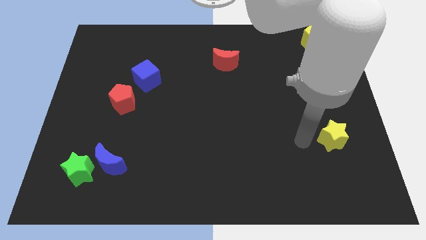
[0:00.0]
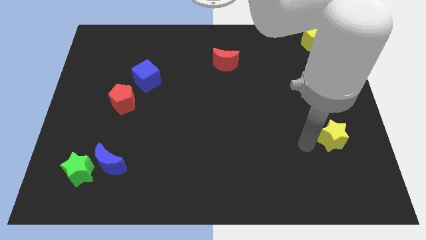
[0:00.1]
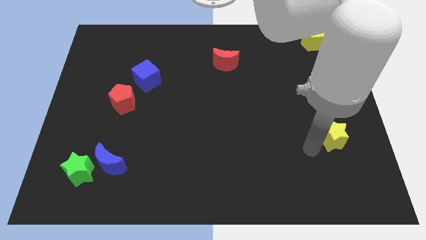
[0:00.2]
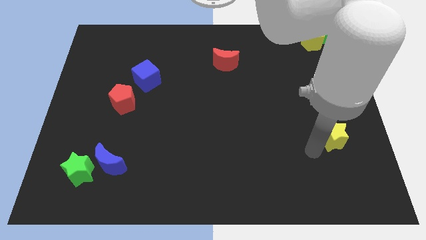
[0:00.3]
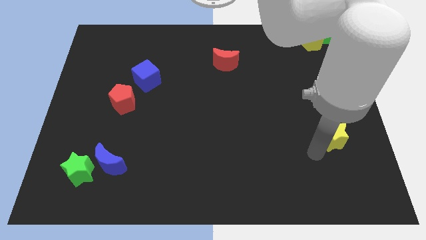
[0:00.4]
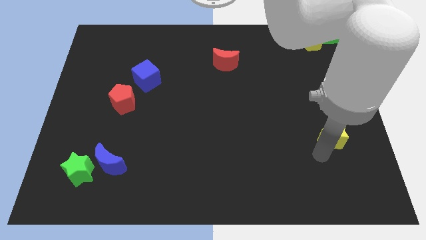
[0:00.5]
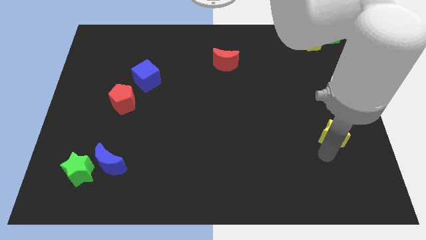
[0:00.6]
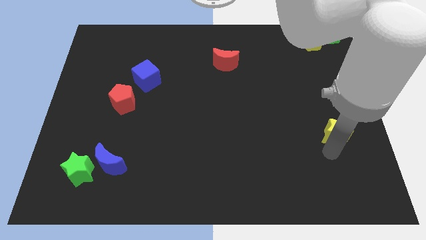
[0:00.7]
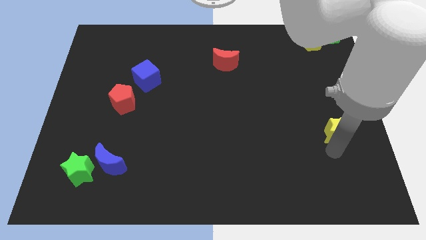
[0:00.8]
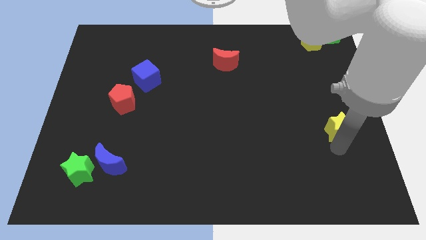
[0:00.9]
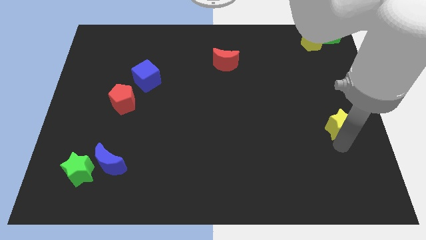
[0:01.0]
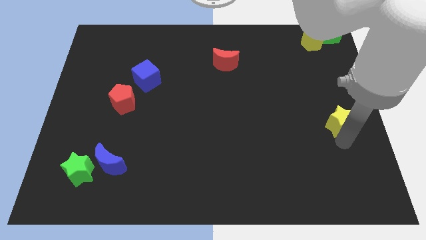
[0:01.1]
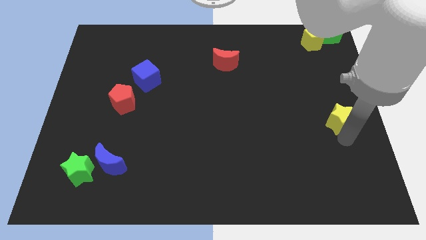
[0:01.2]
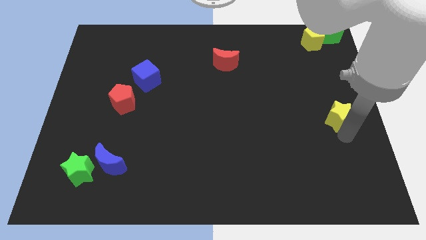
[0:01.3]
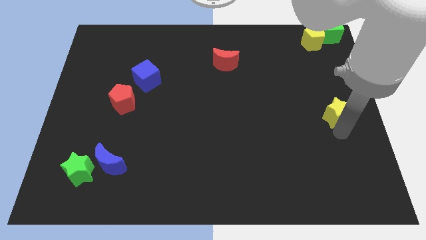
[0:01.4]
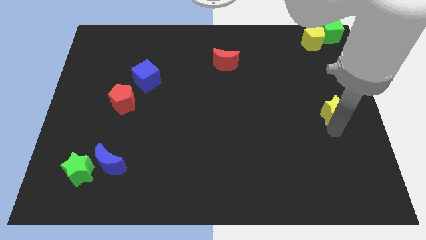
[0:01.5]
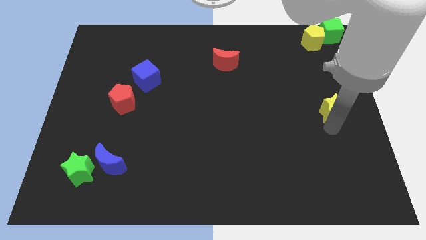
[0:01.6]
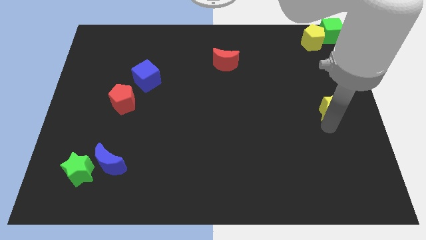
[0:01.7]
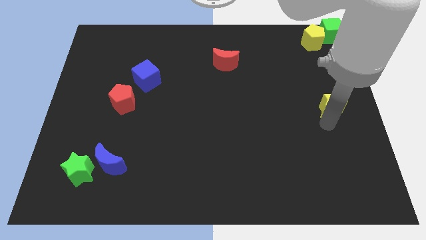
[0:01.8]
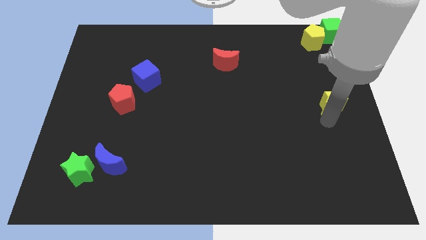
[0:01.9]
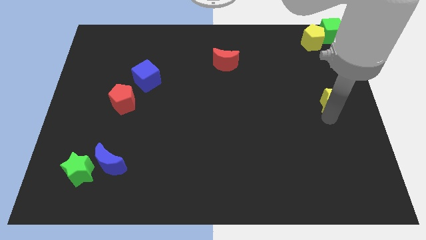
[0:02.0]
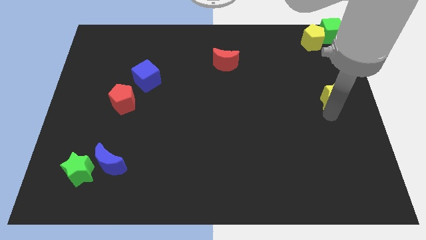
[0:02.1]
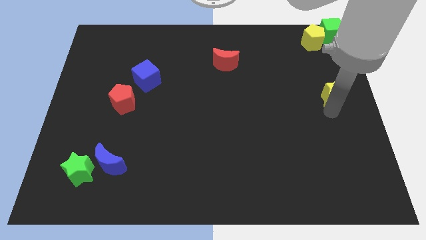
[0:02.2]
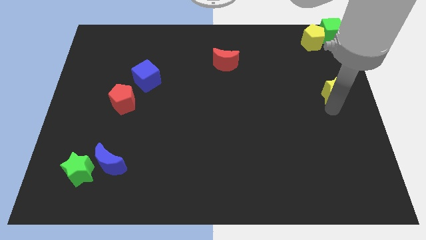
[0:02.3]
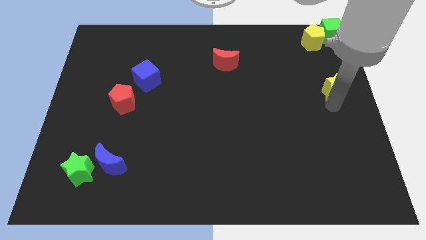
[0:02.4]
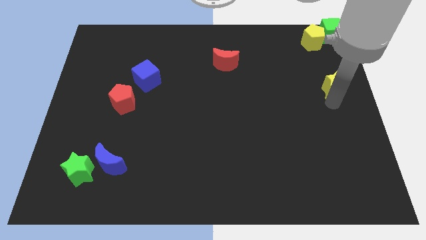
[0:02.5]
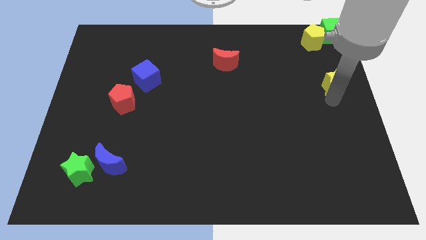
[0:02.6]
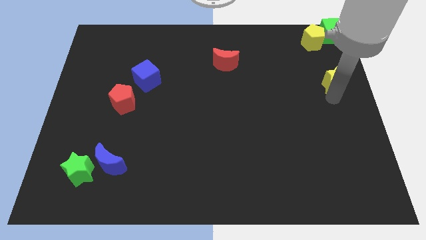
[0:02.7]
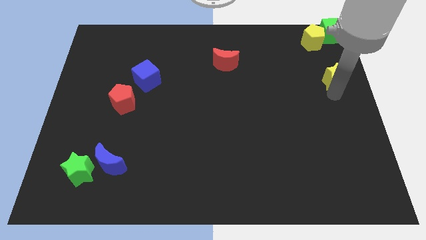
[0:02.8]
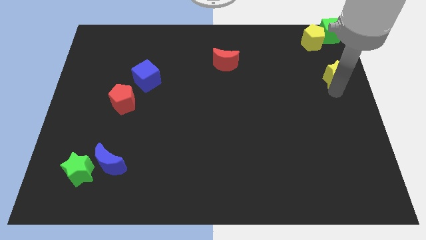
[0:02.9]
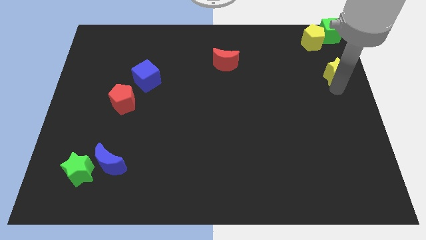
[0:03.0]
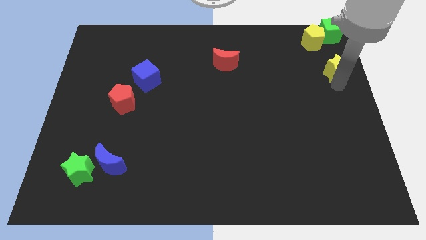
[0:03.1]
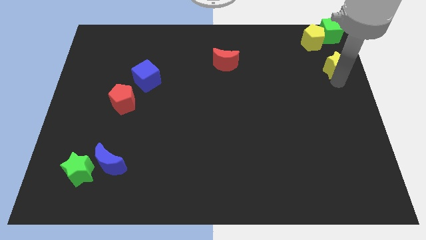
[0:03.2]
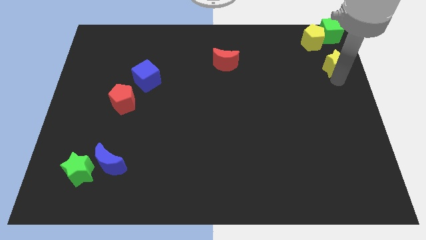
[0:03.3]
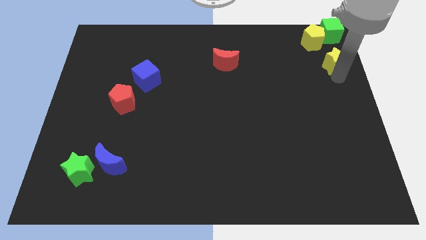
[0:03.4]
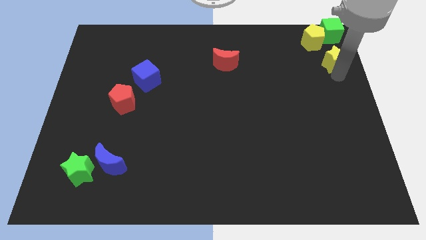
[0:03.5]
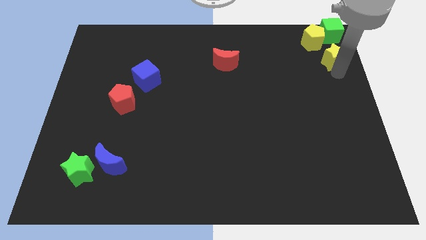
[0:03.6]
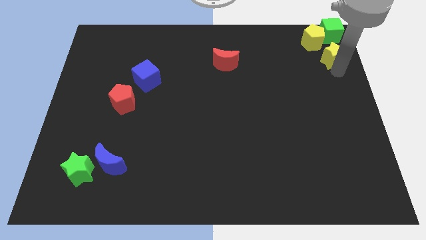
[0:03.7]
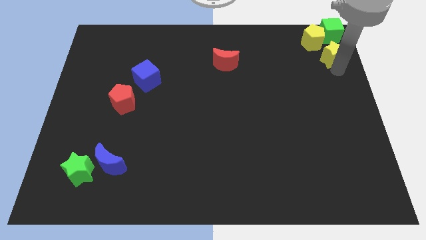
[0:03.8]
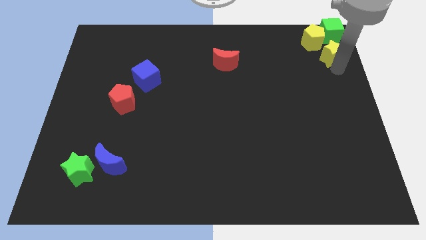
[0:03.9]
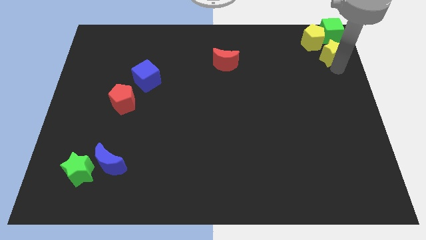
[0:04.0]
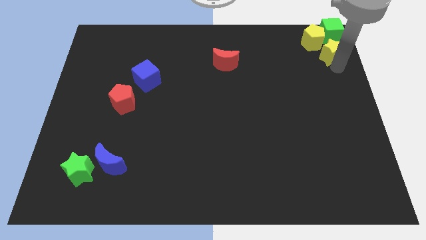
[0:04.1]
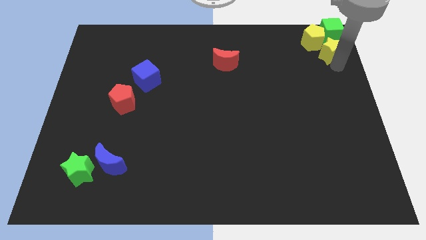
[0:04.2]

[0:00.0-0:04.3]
place the yellow star to the bottom right of the yellow pentagon

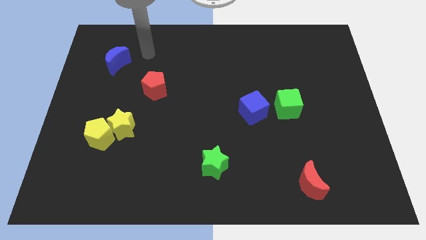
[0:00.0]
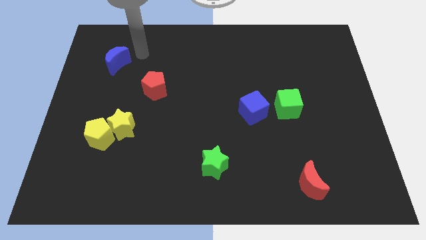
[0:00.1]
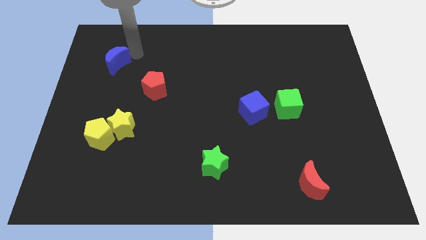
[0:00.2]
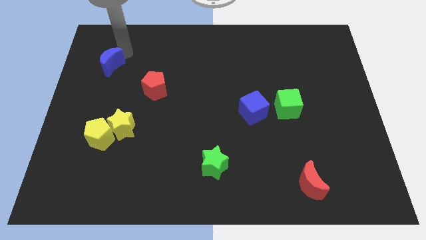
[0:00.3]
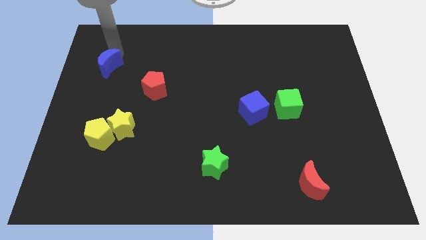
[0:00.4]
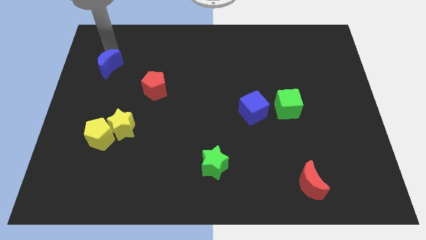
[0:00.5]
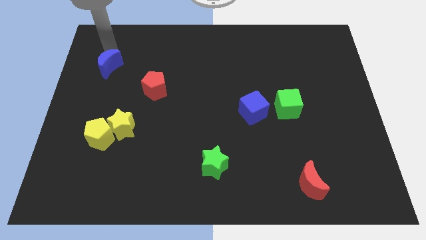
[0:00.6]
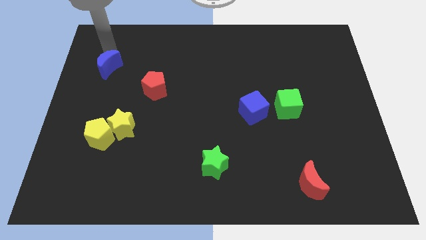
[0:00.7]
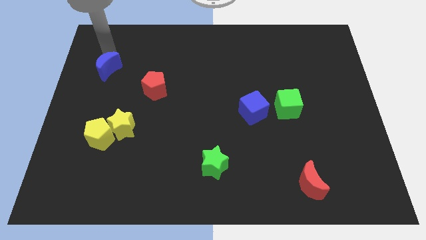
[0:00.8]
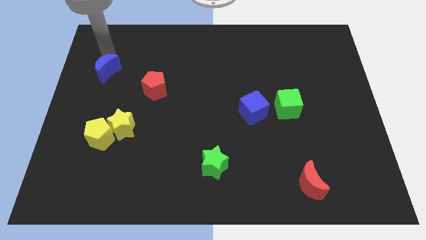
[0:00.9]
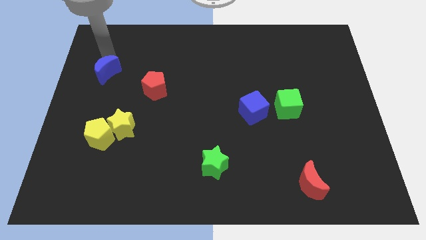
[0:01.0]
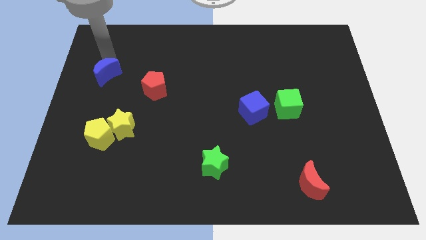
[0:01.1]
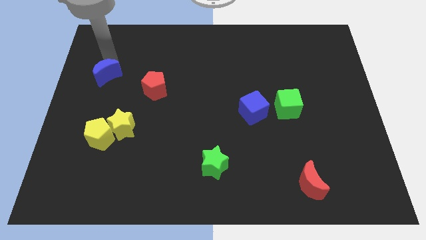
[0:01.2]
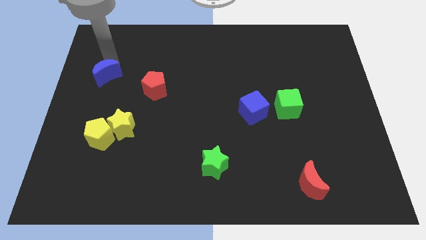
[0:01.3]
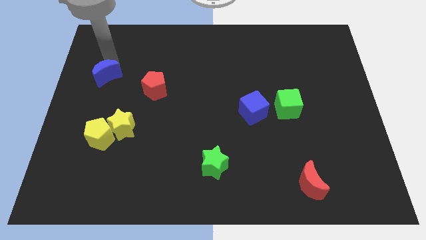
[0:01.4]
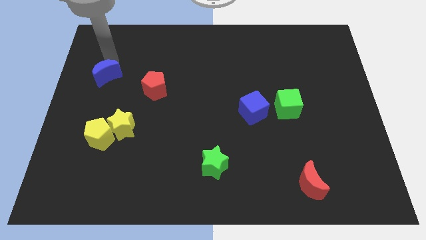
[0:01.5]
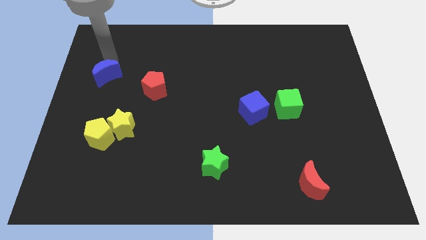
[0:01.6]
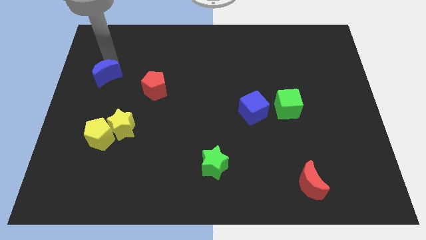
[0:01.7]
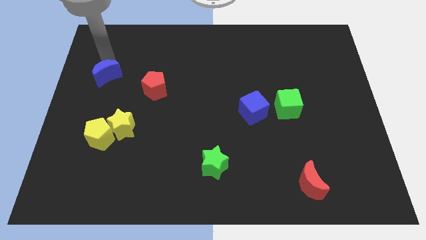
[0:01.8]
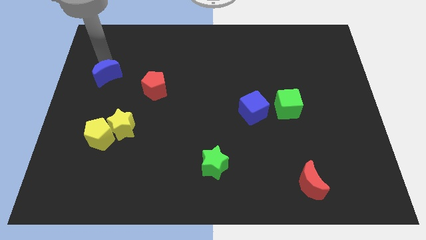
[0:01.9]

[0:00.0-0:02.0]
push the blue moon towards the group of yellow blocks

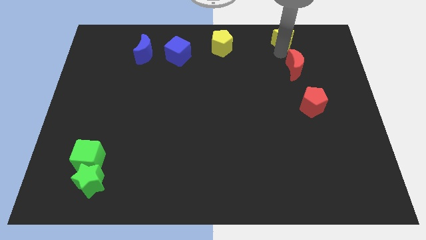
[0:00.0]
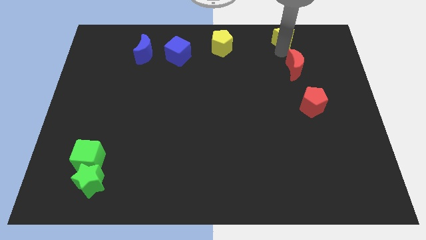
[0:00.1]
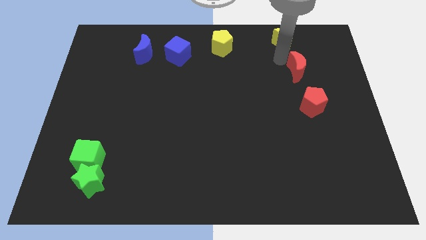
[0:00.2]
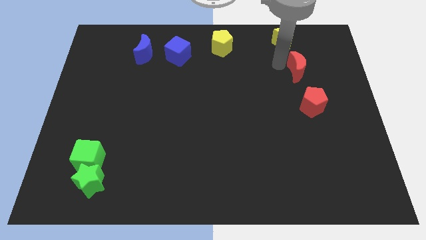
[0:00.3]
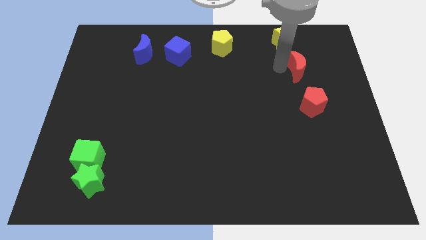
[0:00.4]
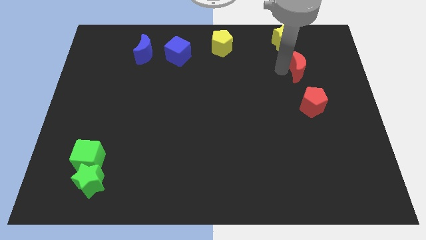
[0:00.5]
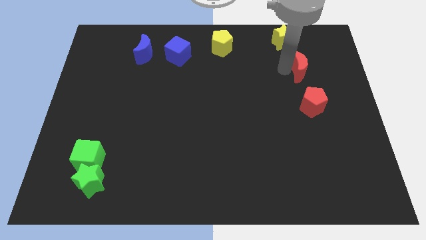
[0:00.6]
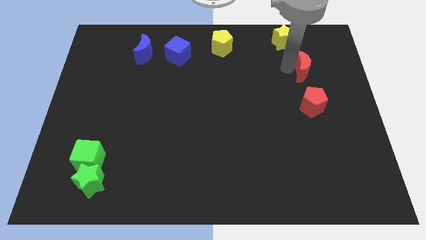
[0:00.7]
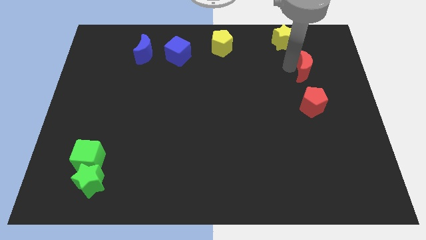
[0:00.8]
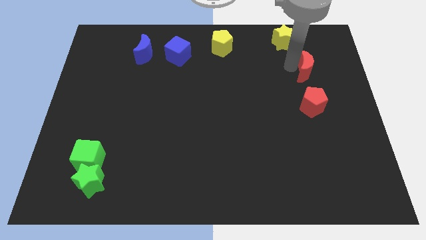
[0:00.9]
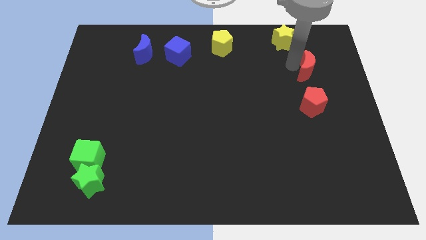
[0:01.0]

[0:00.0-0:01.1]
place the red crescent in between the yellow star and red pentagon

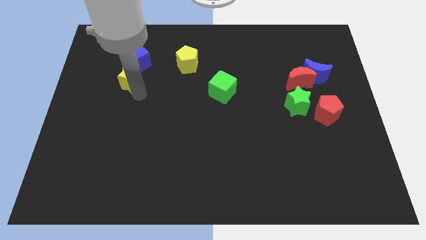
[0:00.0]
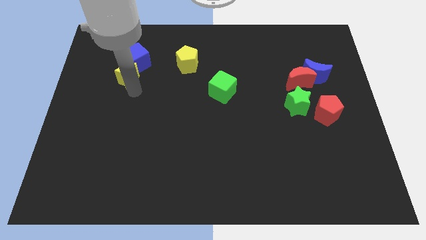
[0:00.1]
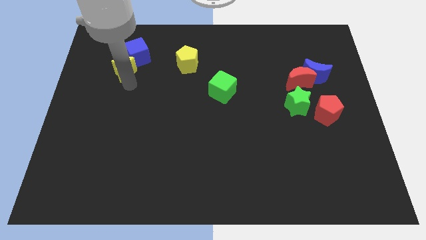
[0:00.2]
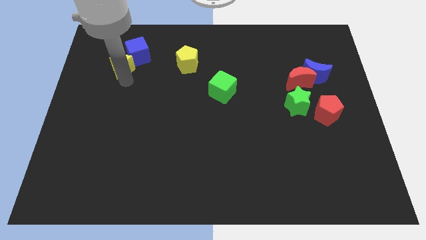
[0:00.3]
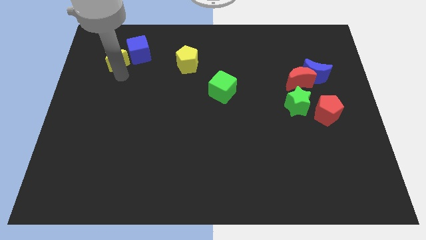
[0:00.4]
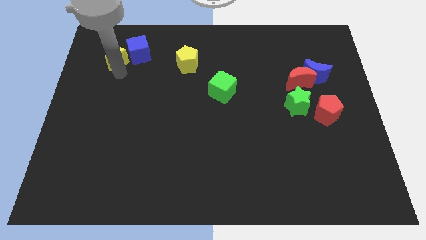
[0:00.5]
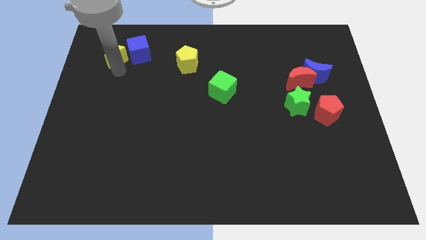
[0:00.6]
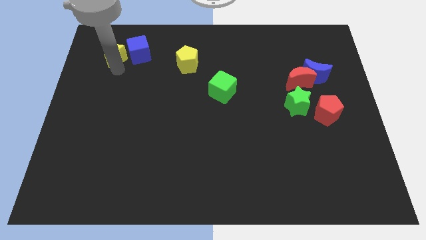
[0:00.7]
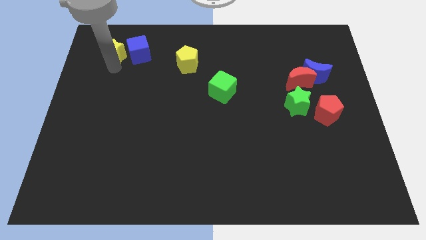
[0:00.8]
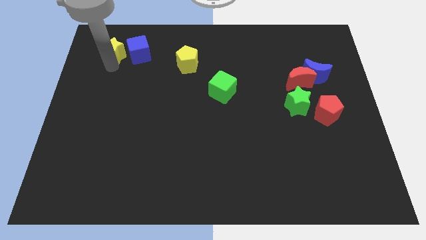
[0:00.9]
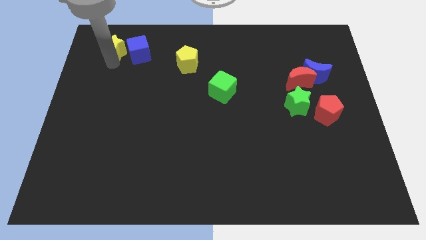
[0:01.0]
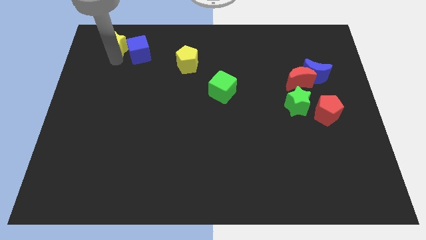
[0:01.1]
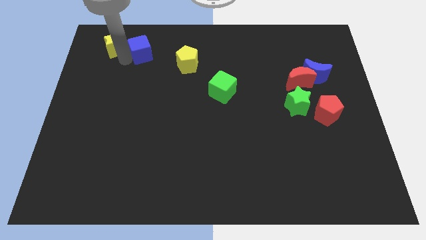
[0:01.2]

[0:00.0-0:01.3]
move the yellow star to the left of the blue cube

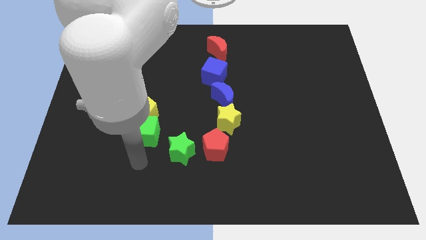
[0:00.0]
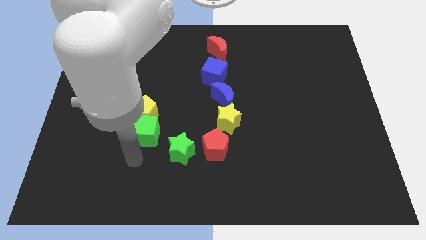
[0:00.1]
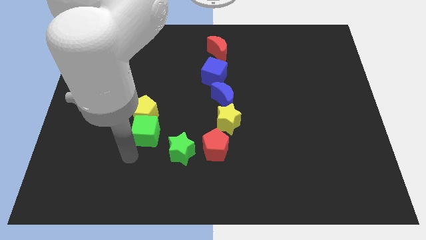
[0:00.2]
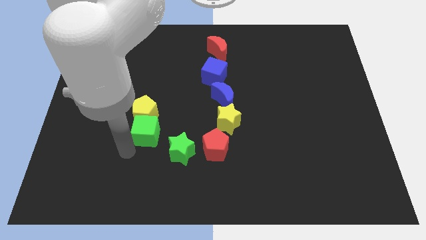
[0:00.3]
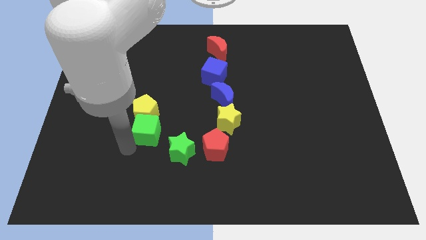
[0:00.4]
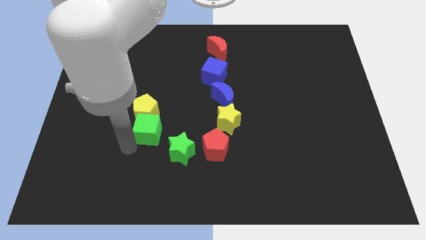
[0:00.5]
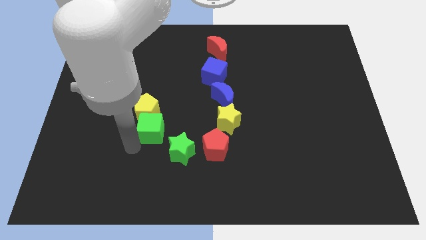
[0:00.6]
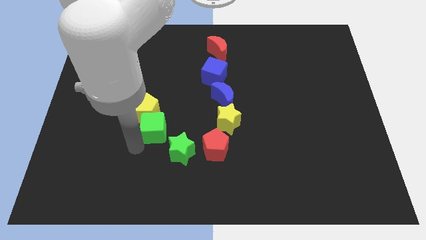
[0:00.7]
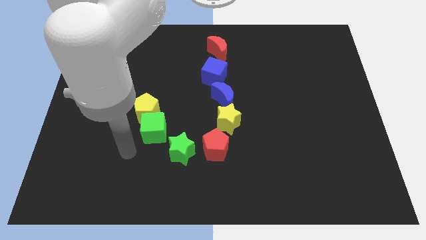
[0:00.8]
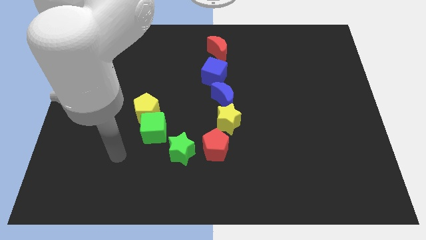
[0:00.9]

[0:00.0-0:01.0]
slightly touch left to the green cube
